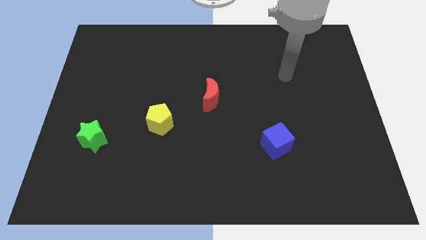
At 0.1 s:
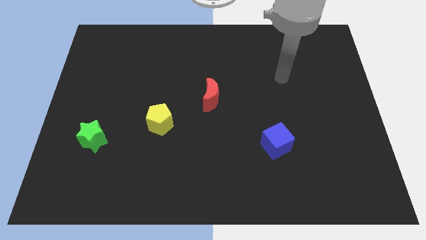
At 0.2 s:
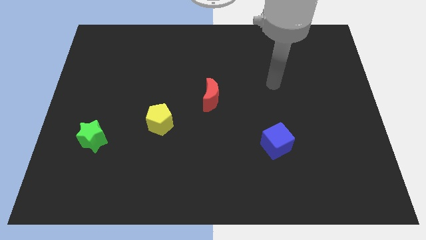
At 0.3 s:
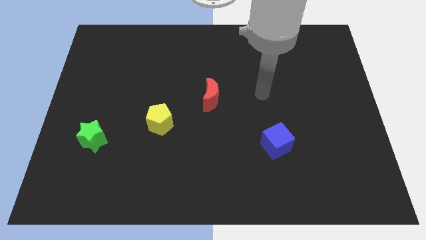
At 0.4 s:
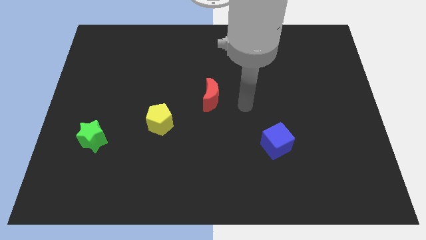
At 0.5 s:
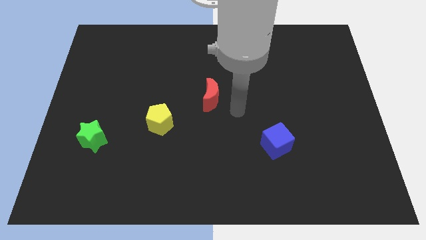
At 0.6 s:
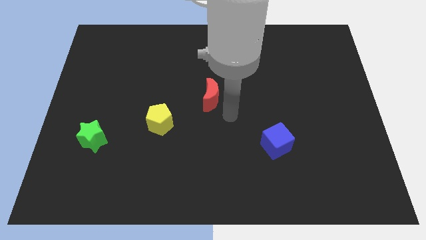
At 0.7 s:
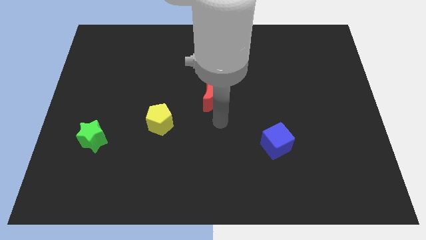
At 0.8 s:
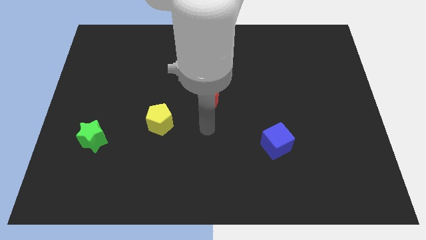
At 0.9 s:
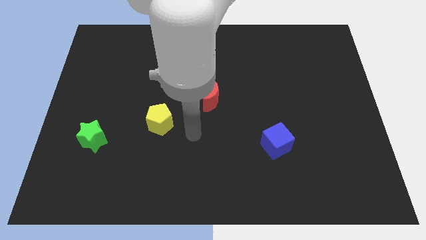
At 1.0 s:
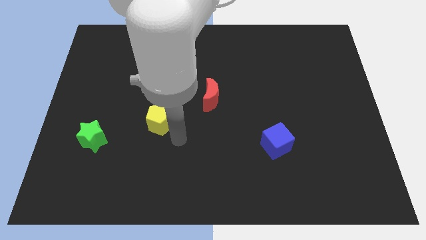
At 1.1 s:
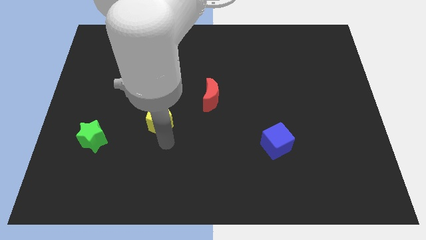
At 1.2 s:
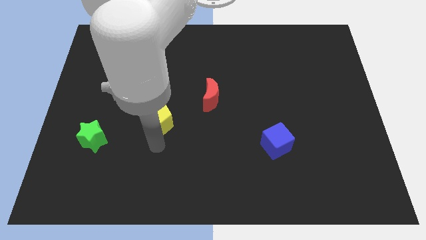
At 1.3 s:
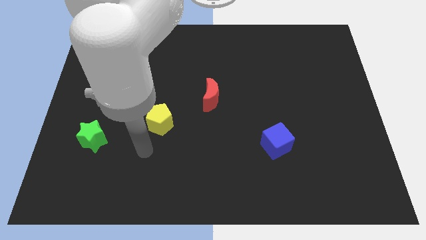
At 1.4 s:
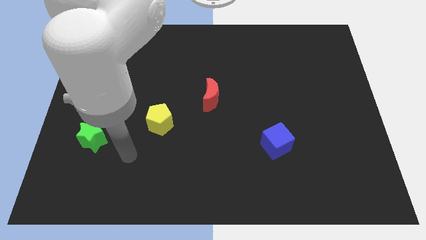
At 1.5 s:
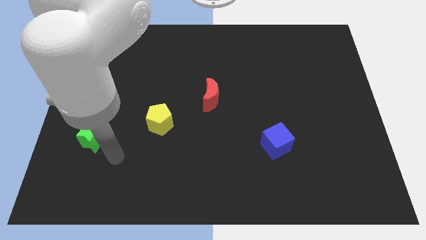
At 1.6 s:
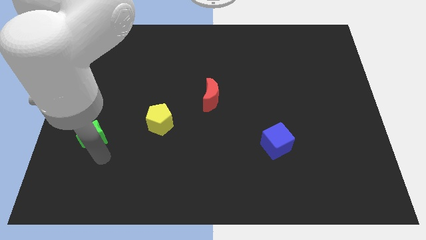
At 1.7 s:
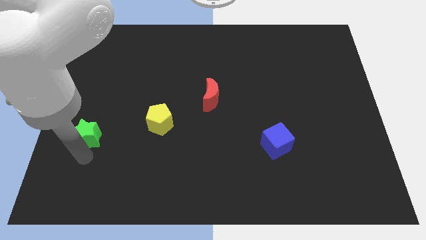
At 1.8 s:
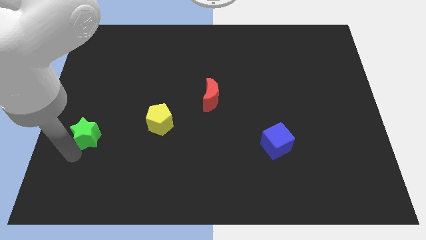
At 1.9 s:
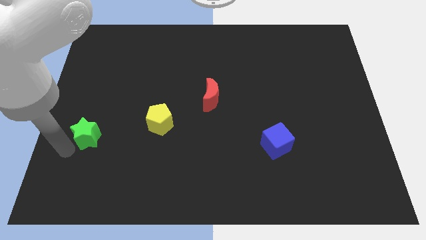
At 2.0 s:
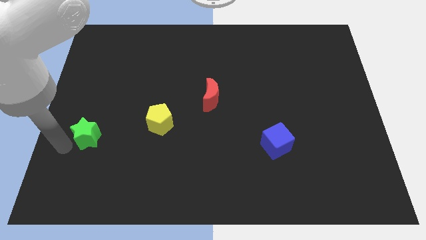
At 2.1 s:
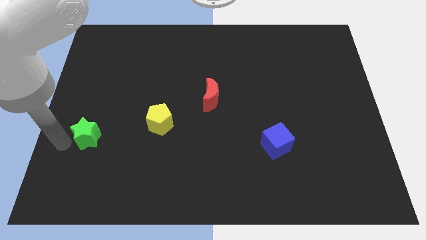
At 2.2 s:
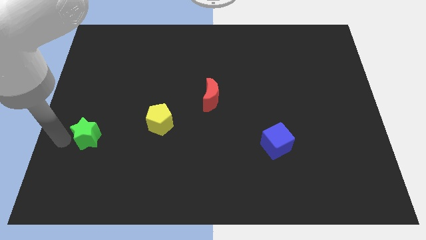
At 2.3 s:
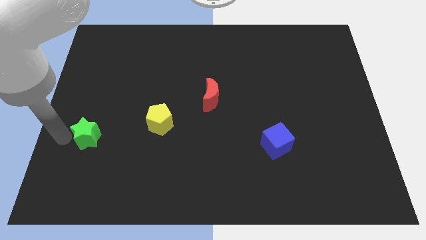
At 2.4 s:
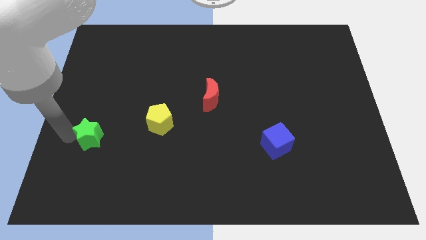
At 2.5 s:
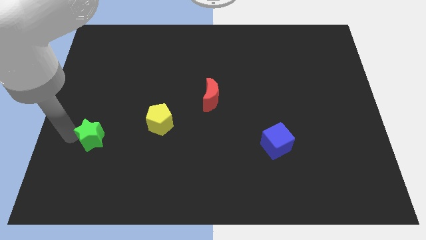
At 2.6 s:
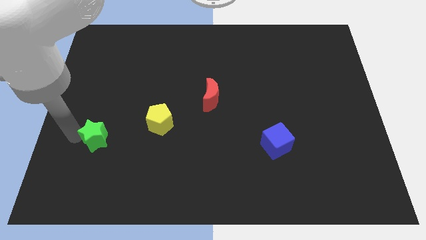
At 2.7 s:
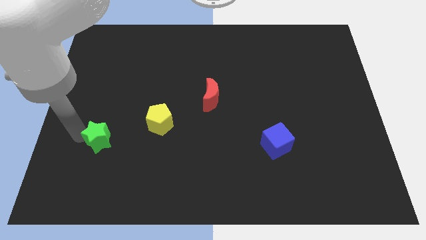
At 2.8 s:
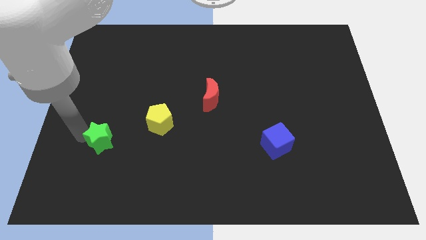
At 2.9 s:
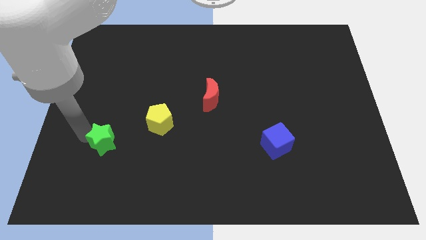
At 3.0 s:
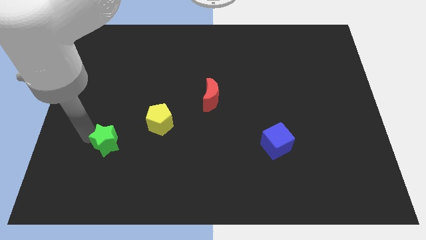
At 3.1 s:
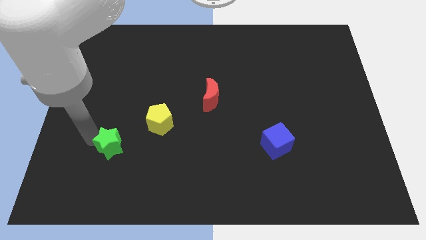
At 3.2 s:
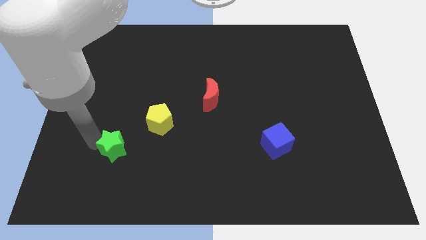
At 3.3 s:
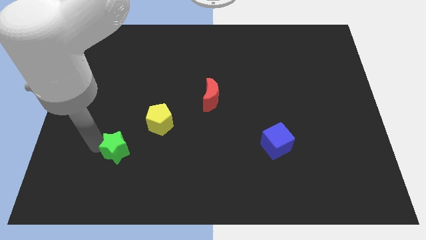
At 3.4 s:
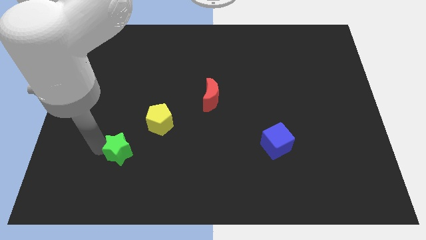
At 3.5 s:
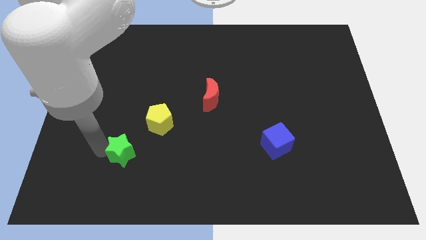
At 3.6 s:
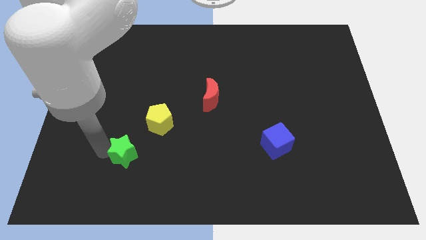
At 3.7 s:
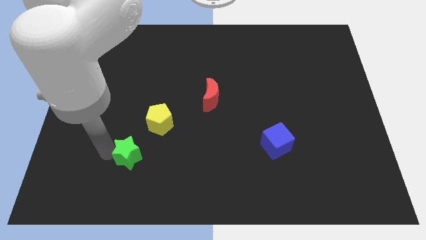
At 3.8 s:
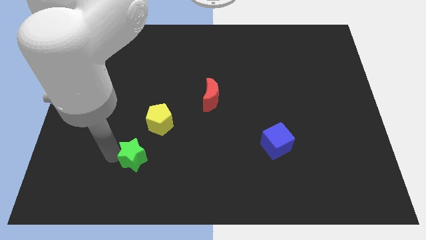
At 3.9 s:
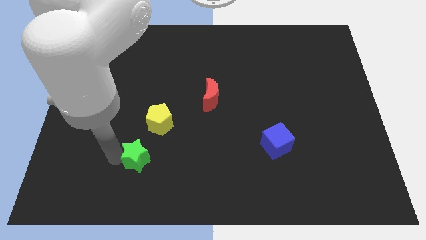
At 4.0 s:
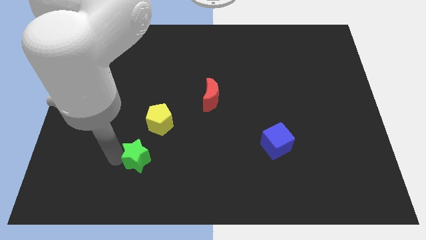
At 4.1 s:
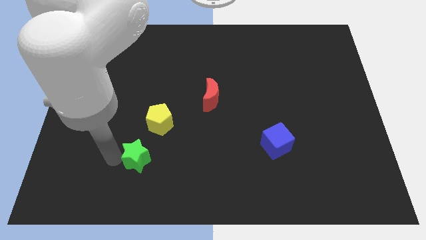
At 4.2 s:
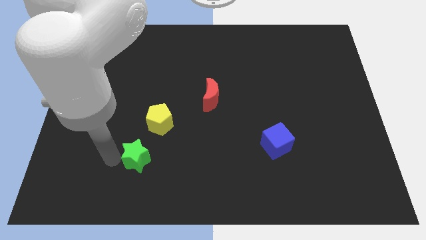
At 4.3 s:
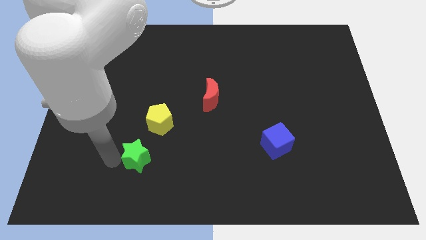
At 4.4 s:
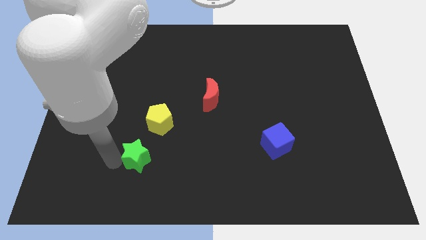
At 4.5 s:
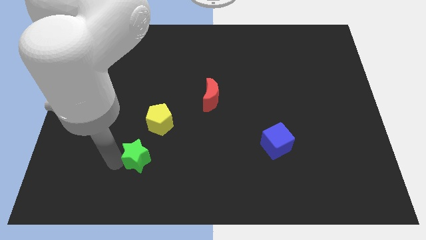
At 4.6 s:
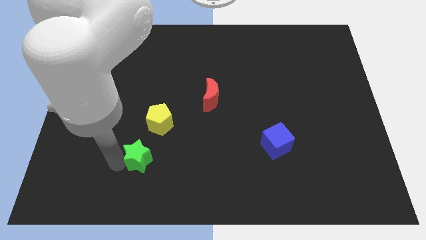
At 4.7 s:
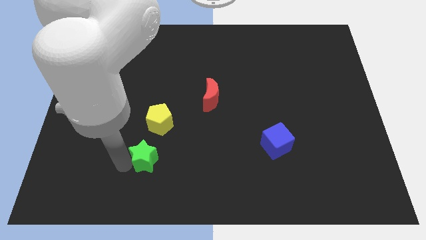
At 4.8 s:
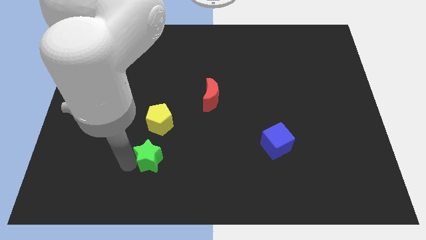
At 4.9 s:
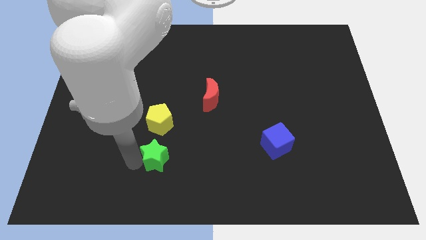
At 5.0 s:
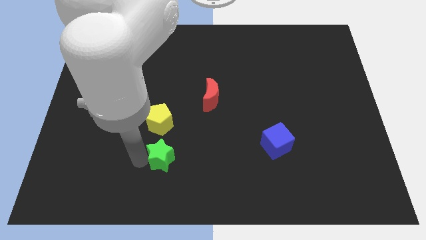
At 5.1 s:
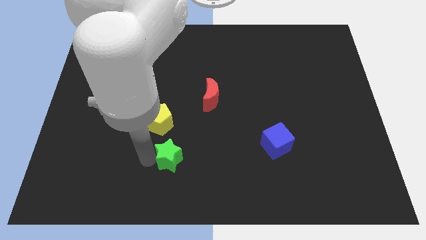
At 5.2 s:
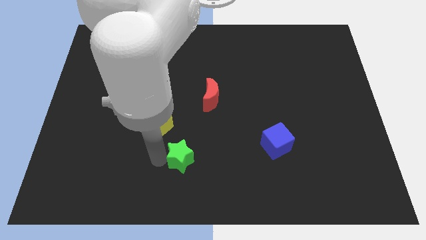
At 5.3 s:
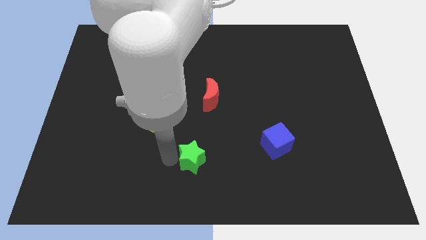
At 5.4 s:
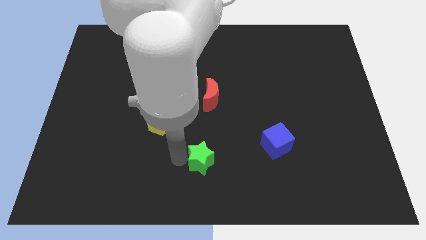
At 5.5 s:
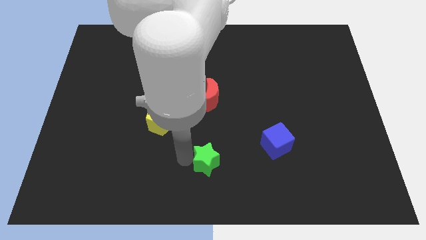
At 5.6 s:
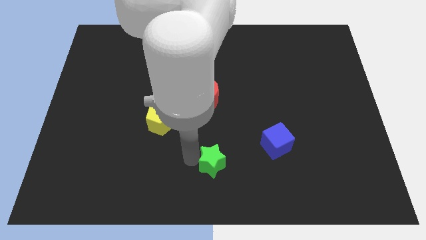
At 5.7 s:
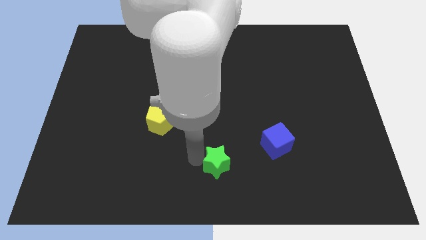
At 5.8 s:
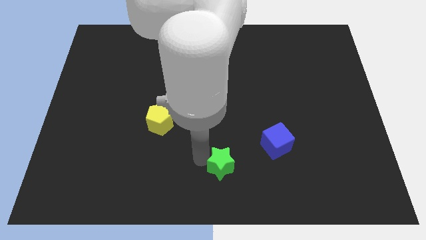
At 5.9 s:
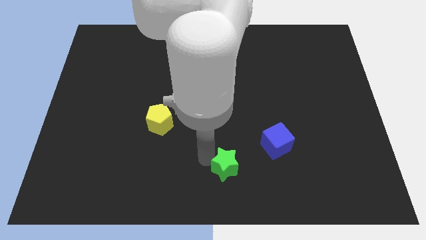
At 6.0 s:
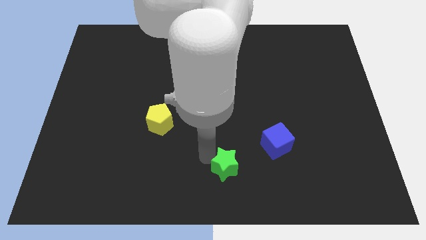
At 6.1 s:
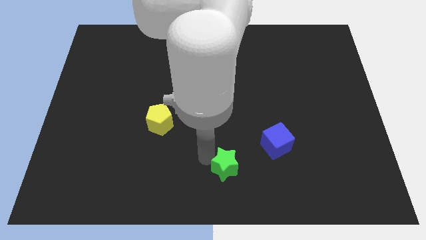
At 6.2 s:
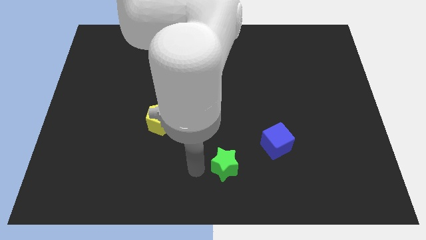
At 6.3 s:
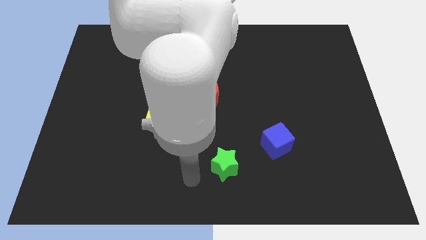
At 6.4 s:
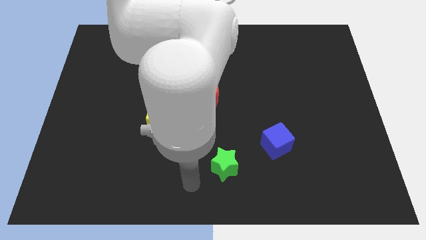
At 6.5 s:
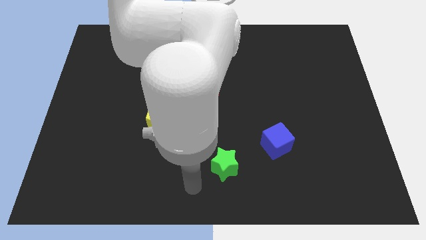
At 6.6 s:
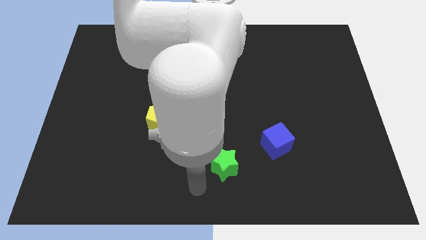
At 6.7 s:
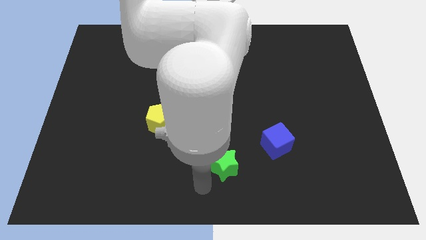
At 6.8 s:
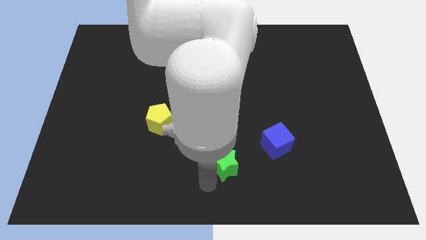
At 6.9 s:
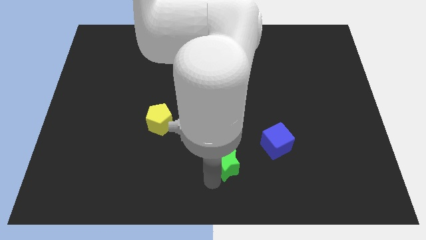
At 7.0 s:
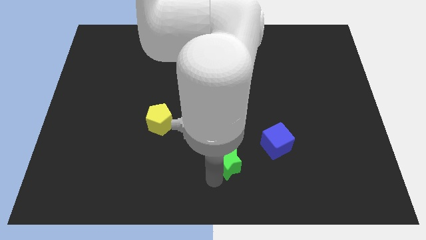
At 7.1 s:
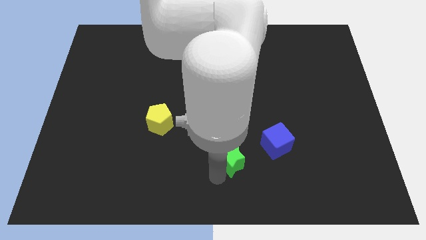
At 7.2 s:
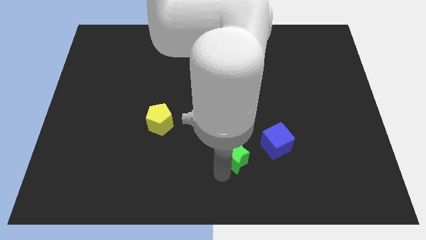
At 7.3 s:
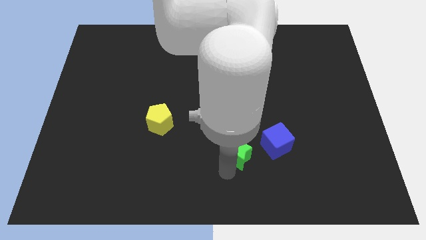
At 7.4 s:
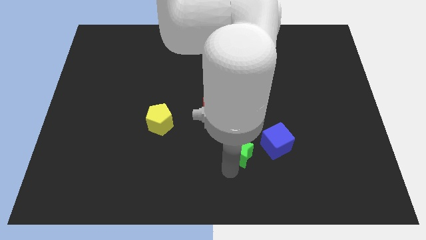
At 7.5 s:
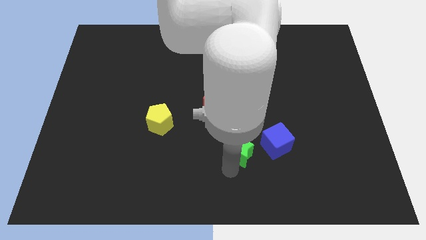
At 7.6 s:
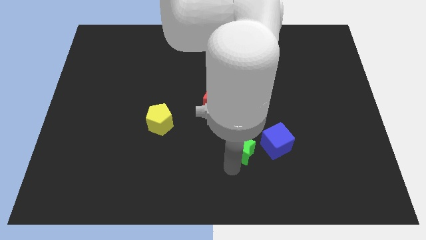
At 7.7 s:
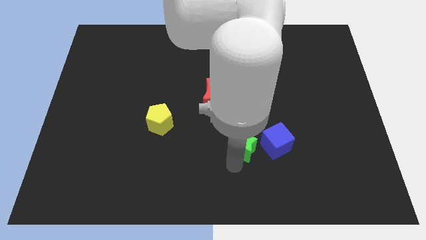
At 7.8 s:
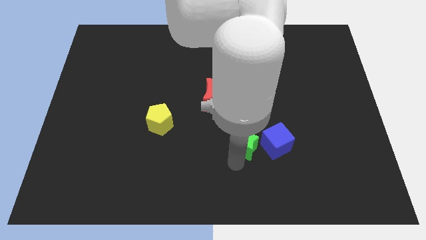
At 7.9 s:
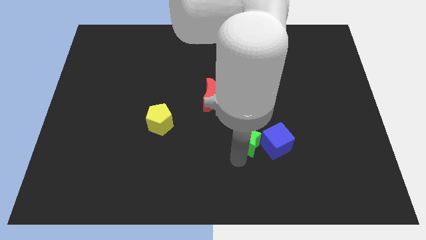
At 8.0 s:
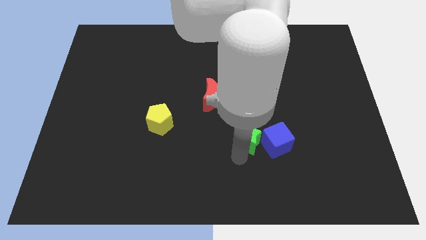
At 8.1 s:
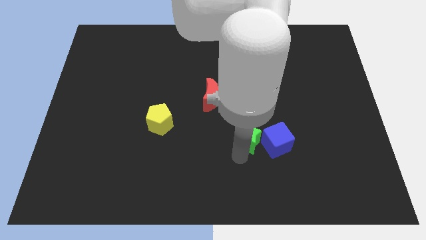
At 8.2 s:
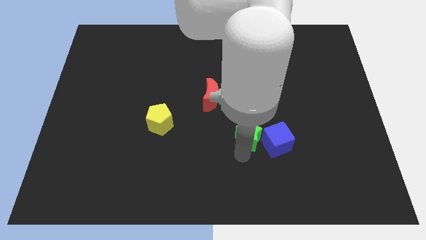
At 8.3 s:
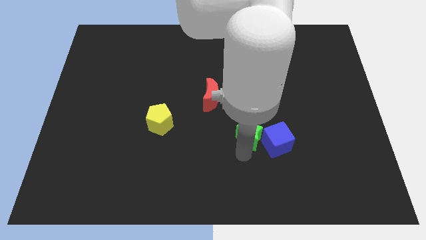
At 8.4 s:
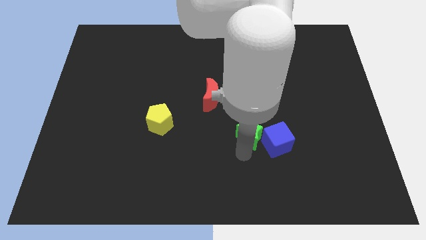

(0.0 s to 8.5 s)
slide the green block close to the blue block
